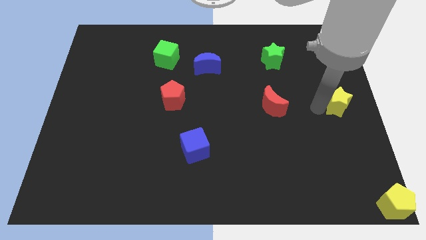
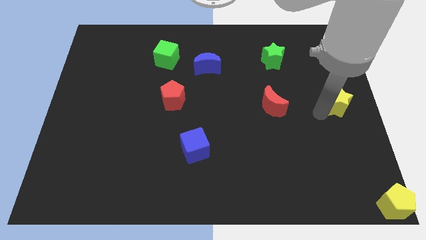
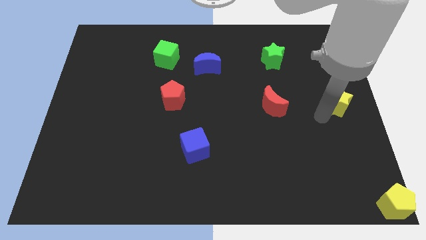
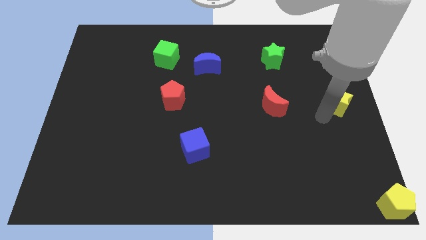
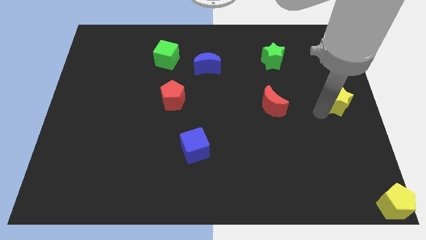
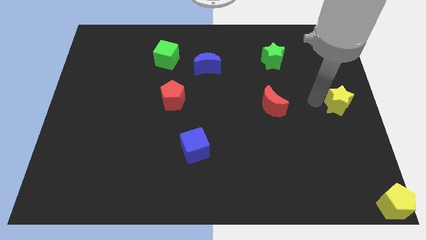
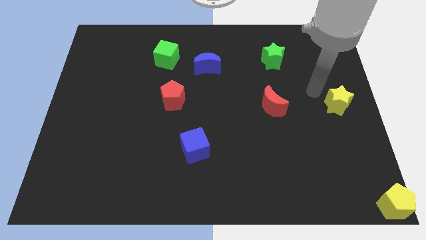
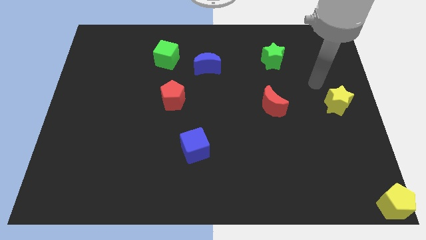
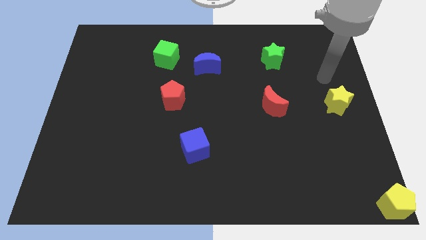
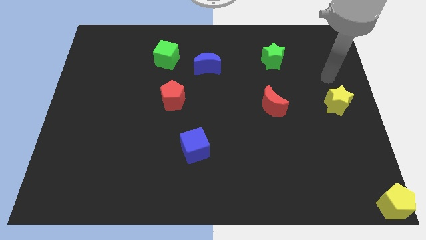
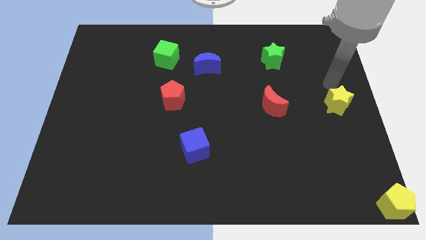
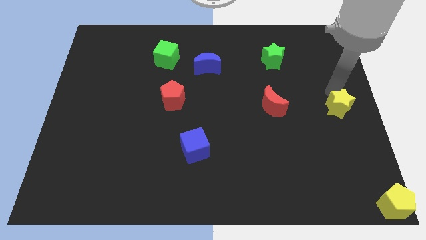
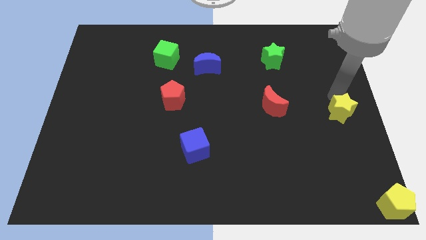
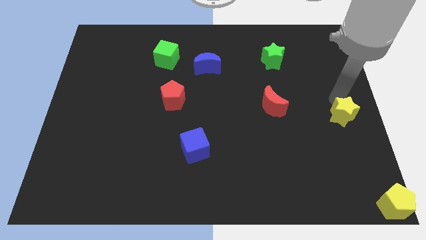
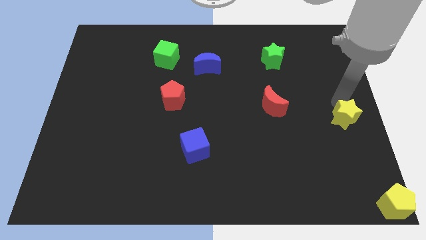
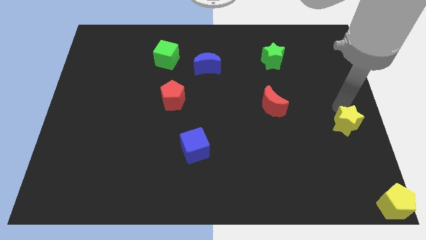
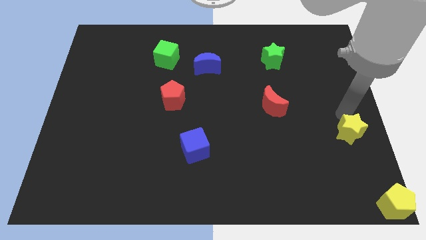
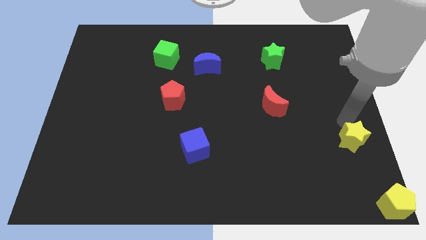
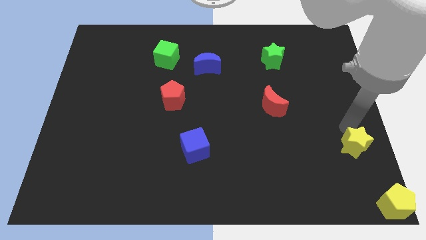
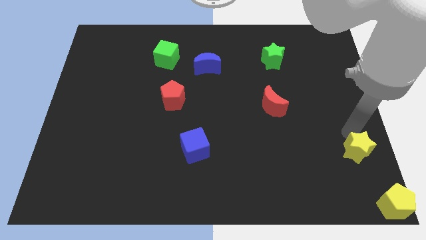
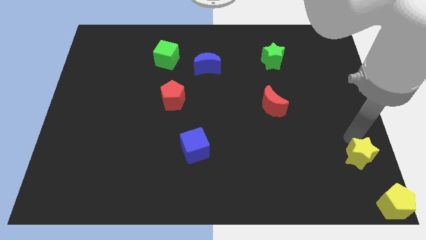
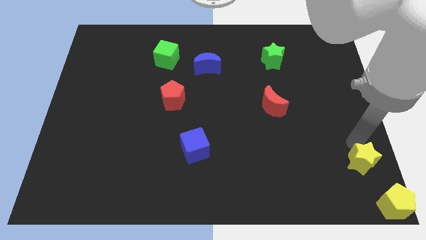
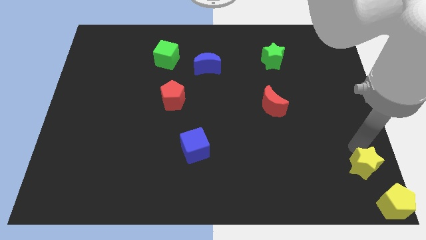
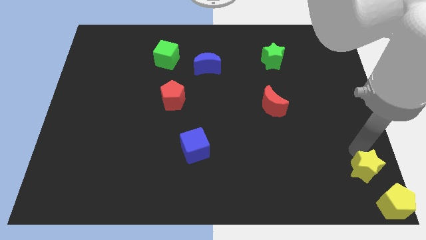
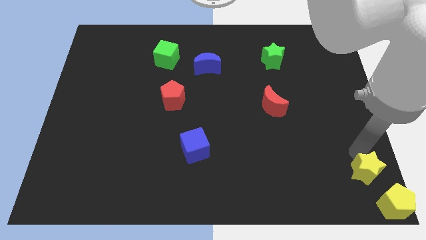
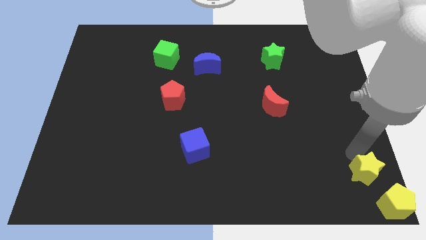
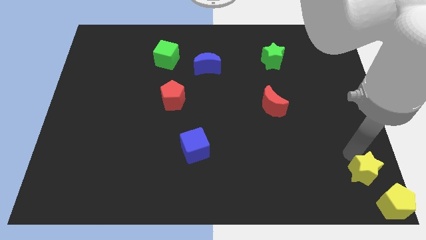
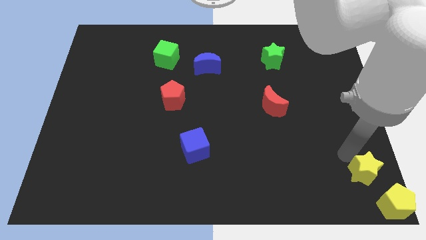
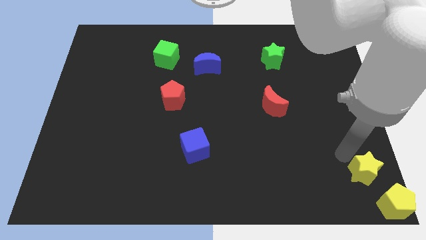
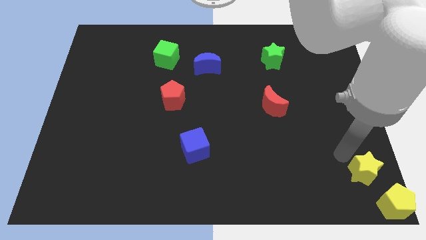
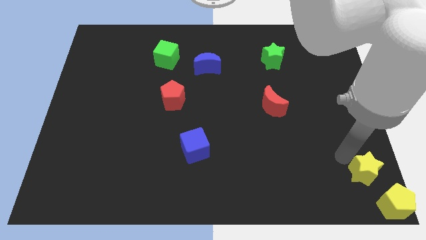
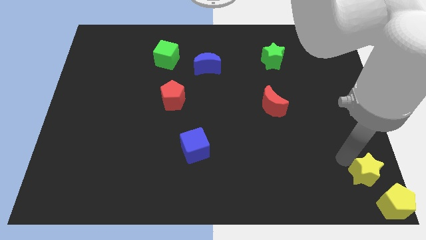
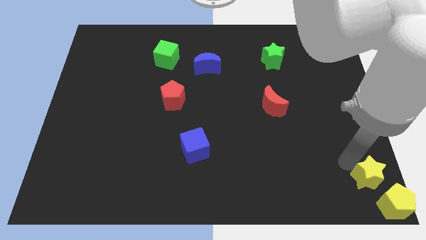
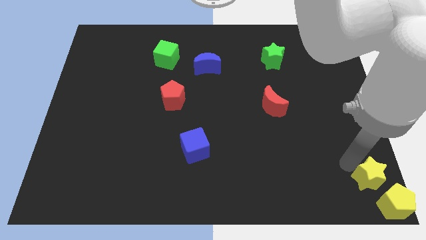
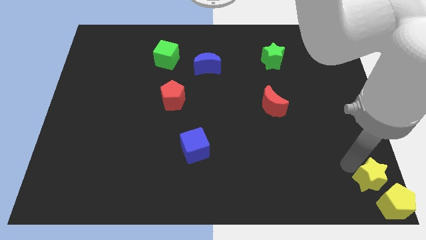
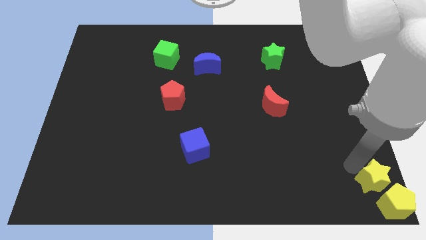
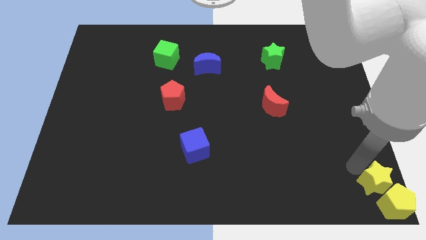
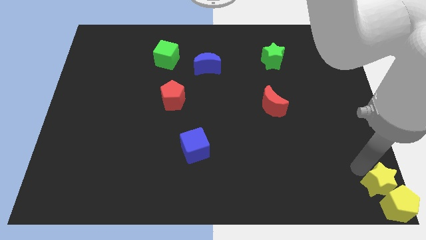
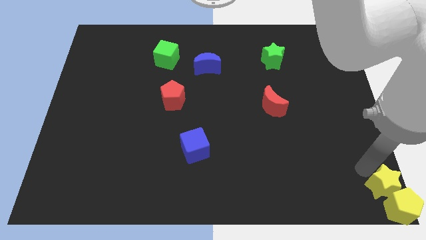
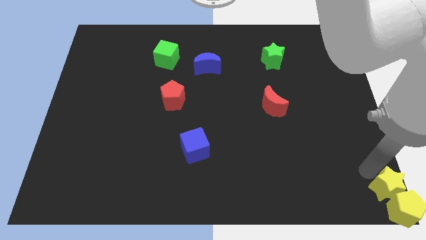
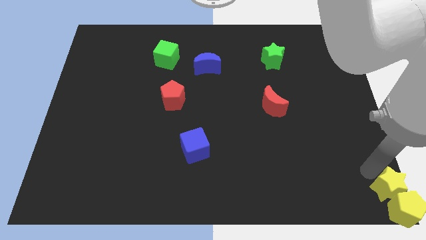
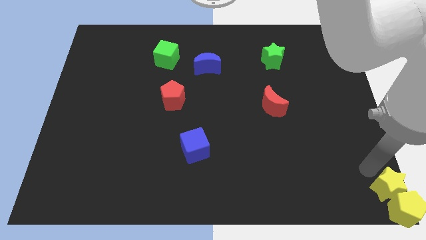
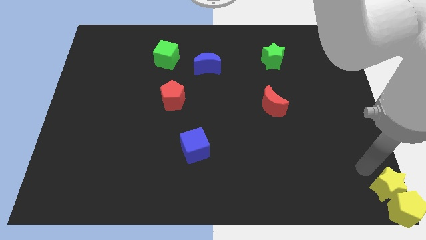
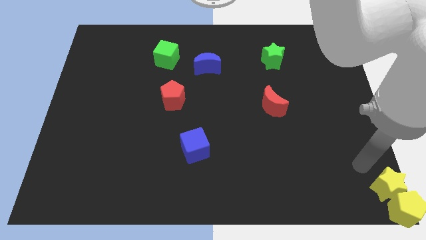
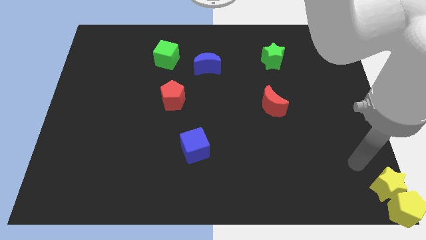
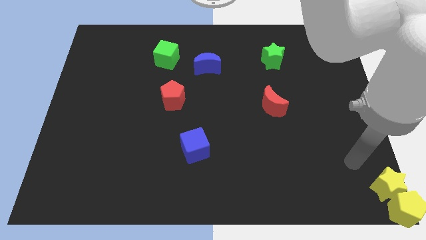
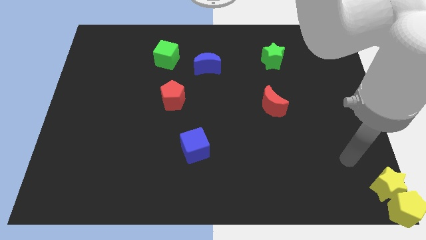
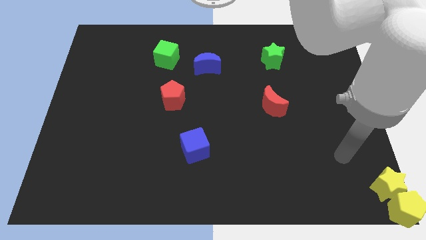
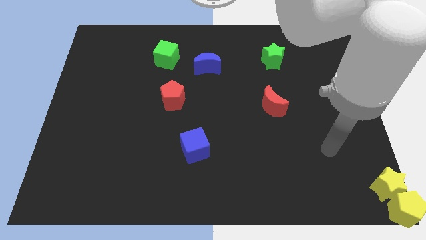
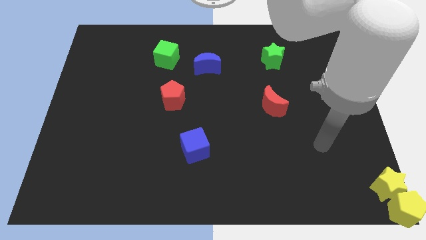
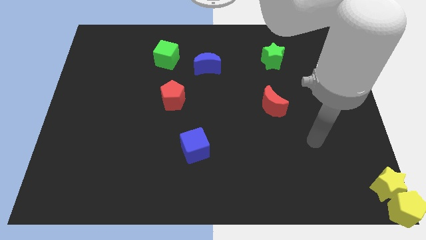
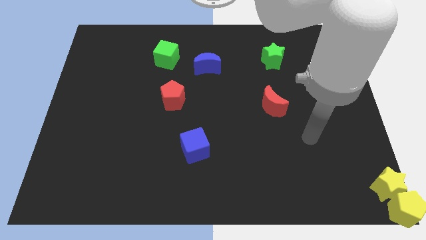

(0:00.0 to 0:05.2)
move yellow star close to yellow pentagon

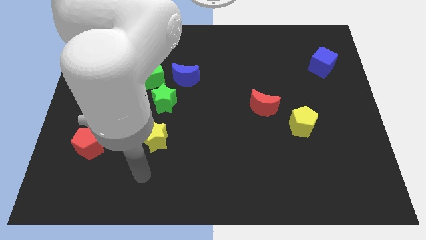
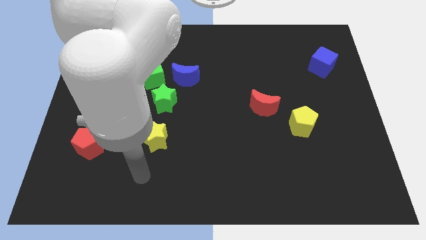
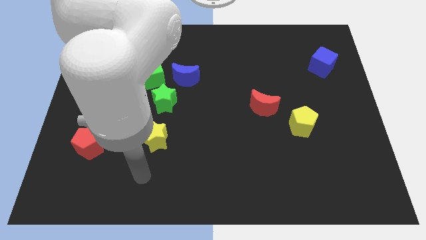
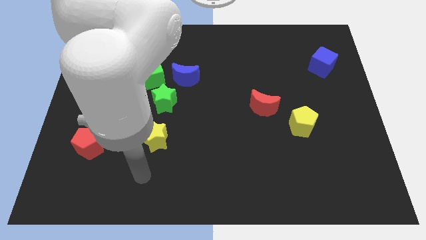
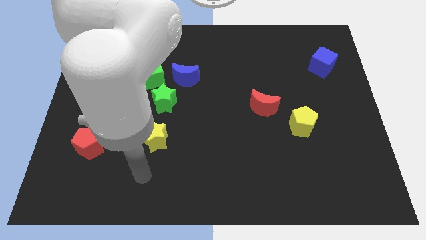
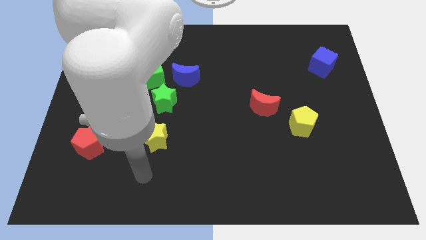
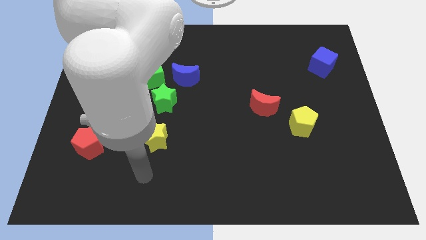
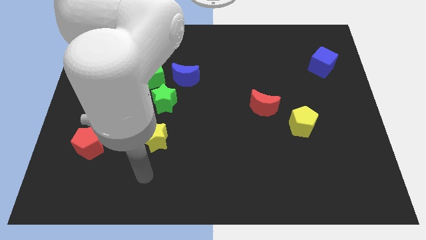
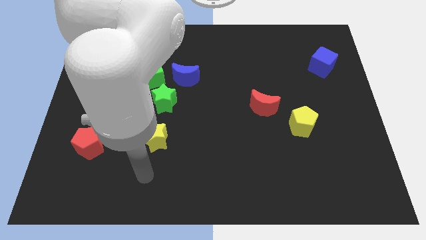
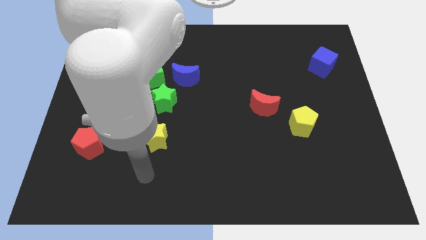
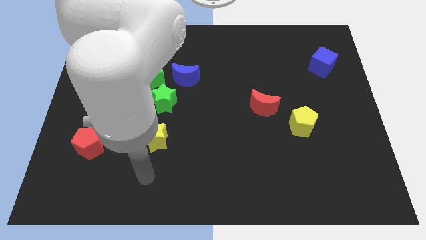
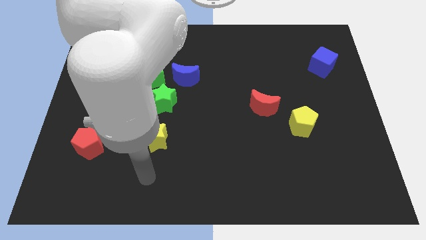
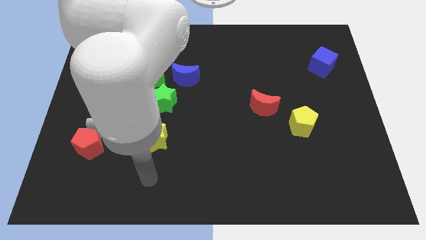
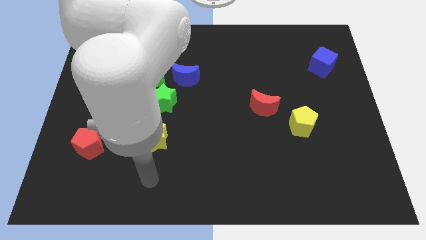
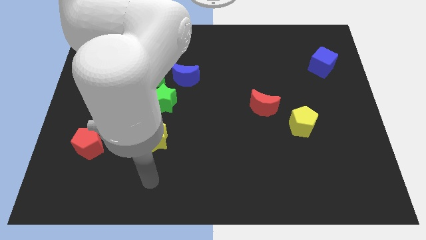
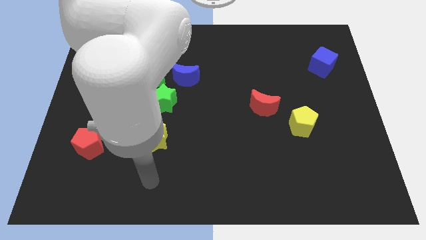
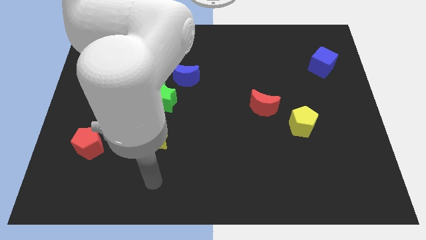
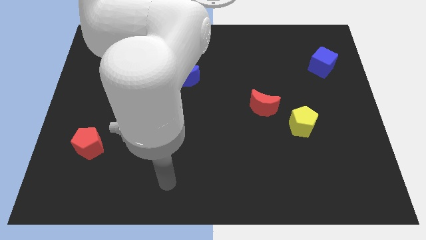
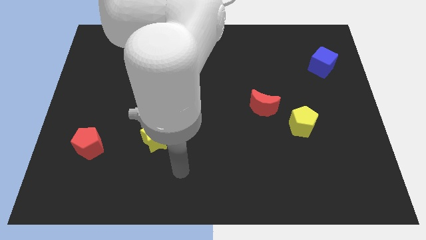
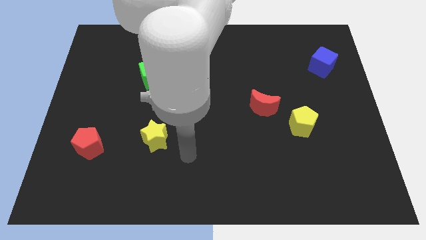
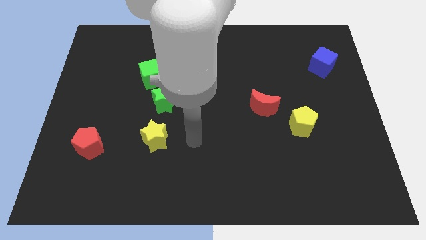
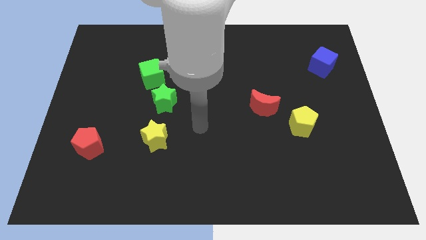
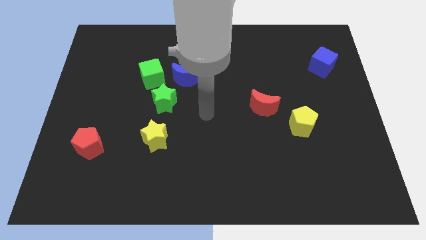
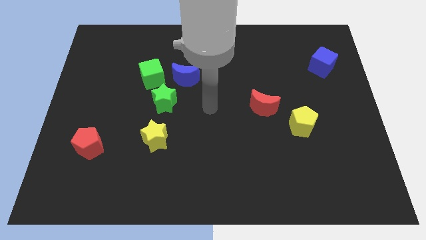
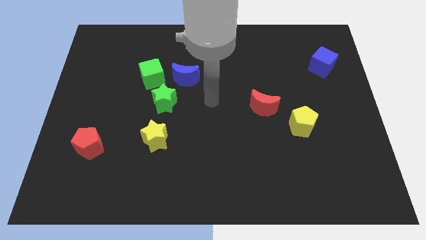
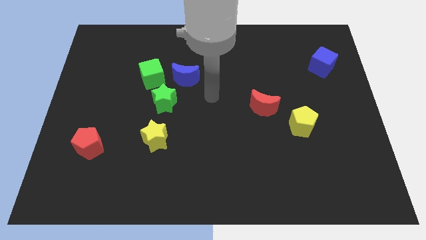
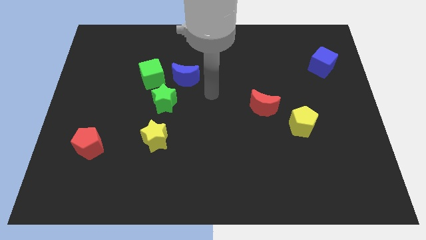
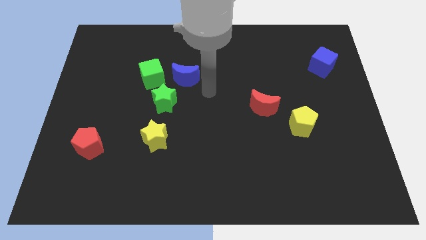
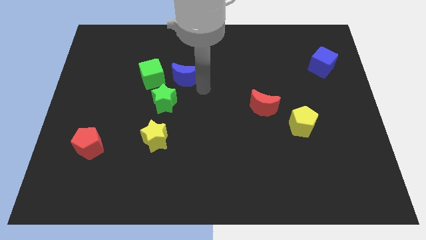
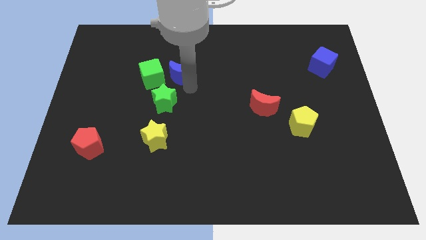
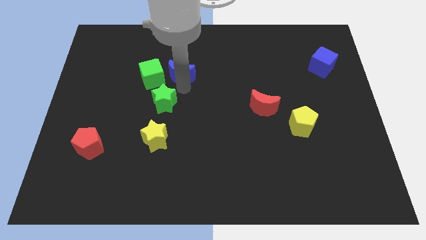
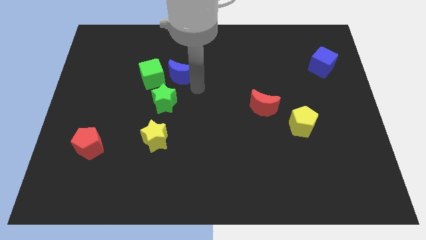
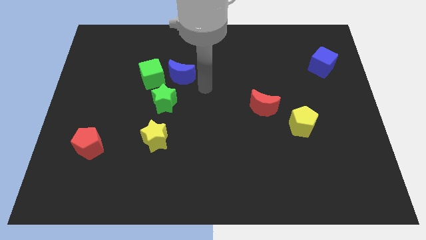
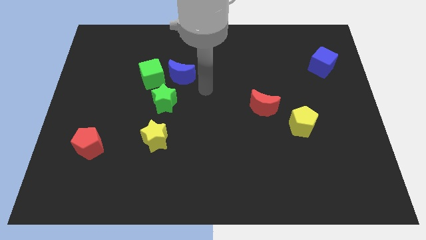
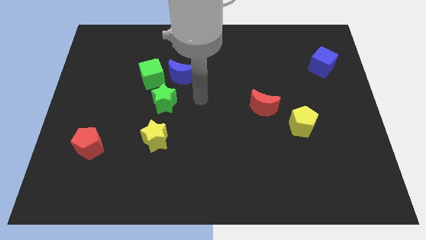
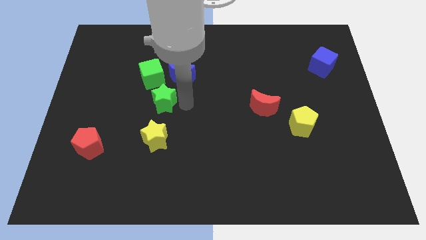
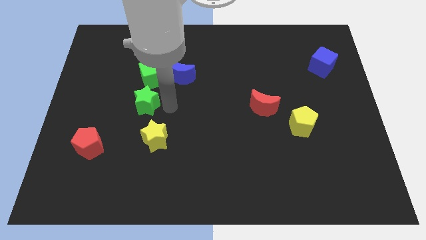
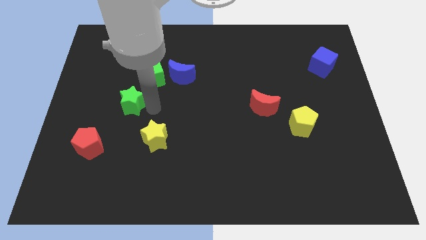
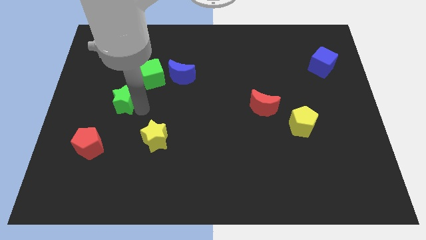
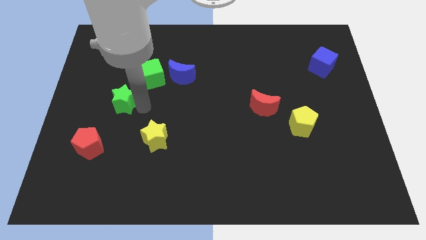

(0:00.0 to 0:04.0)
move the green star slightly left
